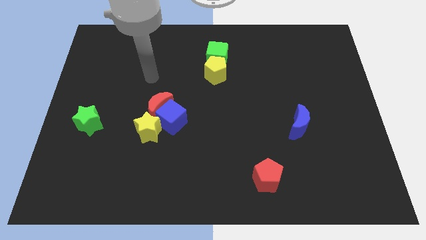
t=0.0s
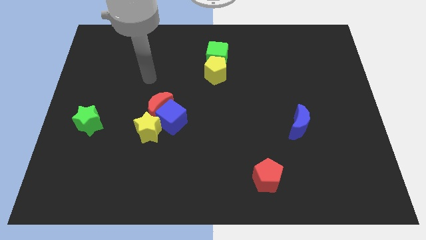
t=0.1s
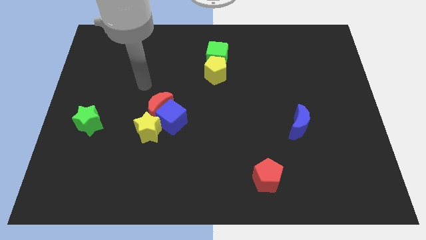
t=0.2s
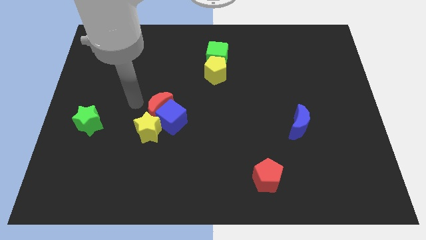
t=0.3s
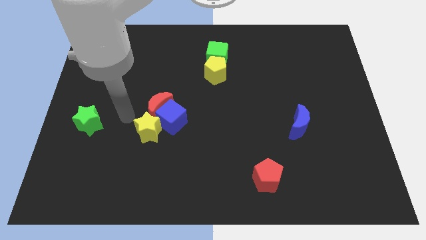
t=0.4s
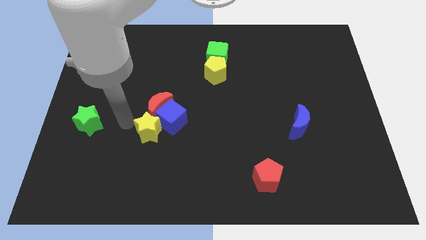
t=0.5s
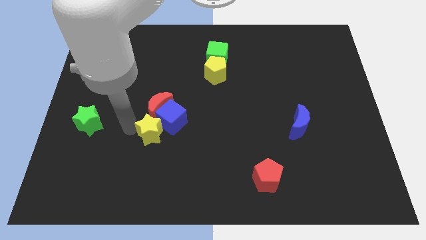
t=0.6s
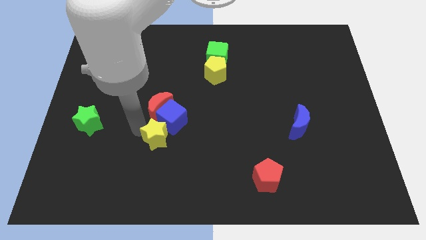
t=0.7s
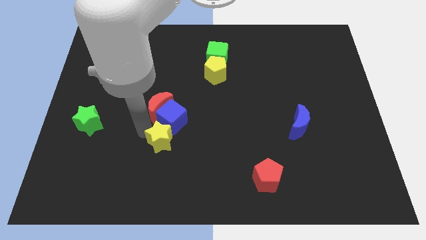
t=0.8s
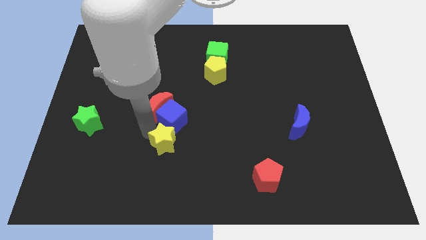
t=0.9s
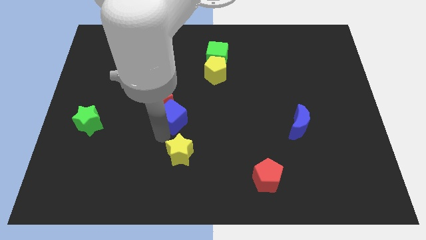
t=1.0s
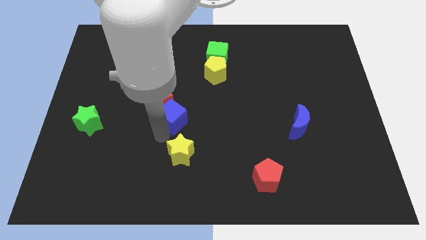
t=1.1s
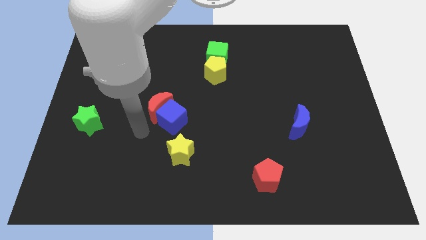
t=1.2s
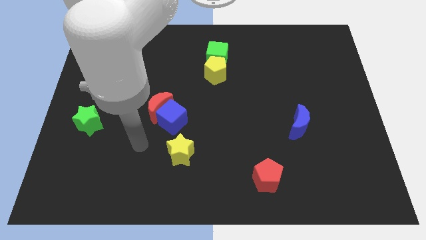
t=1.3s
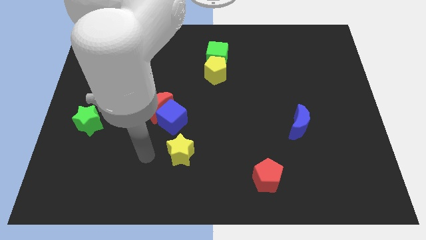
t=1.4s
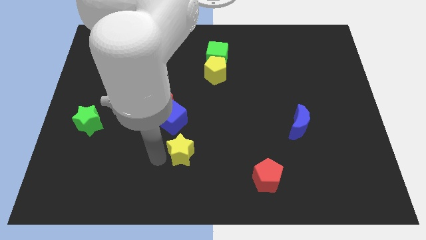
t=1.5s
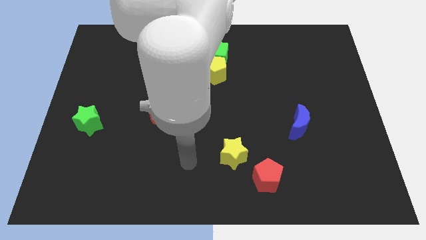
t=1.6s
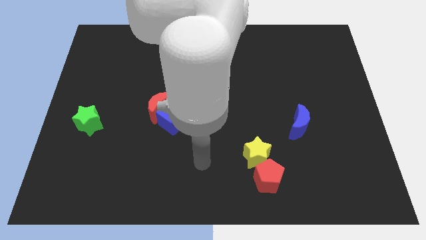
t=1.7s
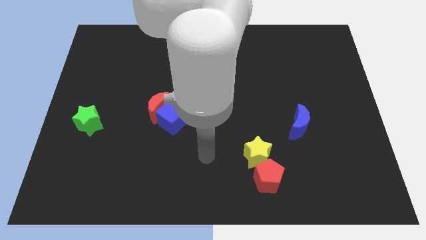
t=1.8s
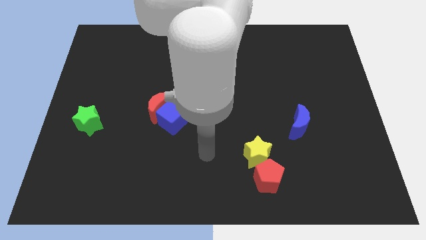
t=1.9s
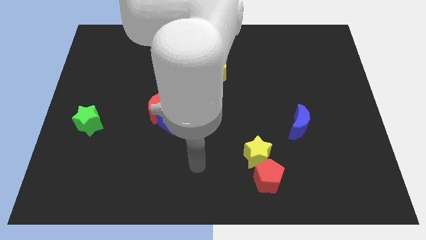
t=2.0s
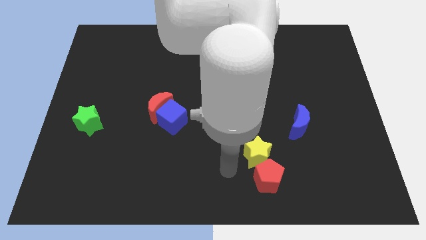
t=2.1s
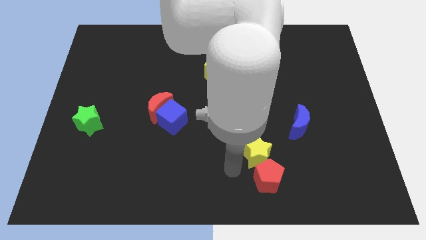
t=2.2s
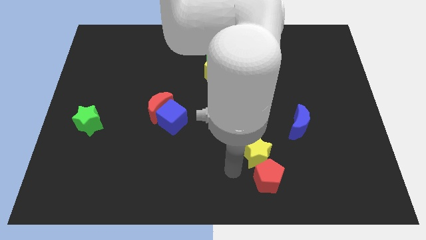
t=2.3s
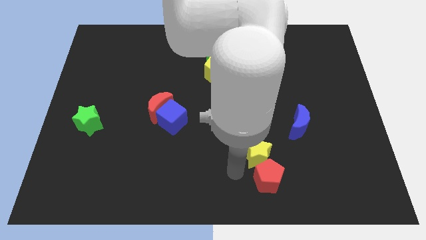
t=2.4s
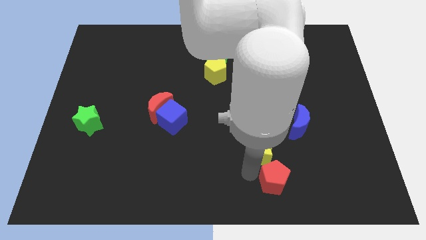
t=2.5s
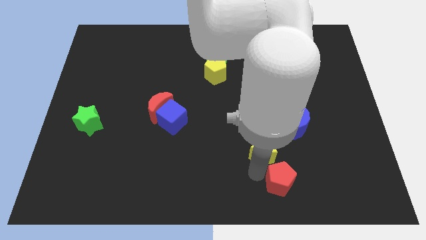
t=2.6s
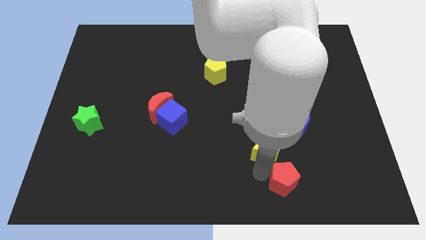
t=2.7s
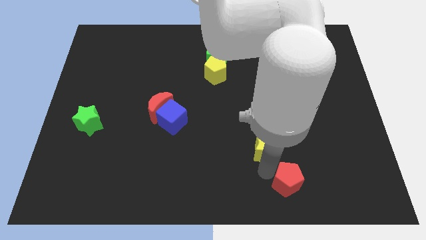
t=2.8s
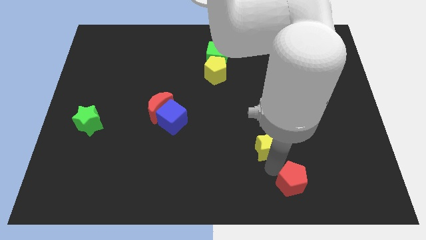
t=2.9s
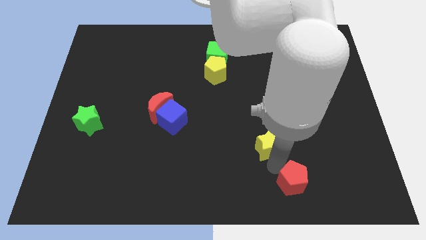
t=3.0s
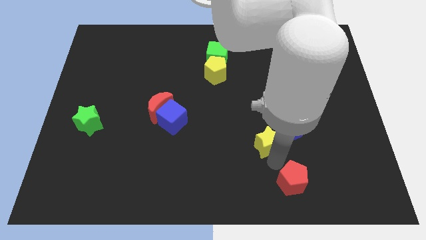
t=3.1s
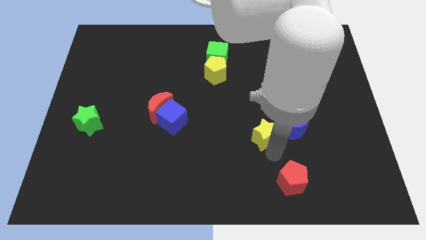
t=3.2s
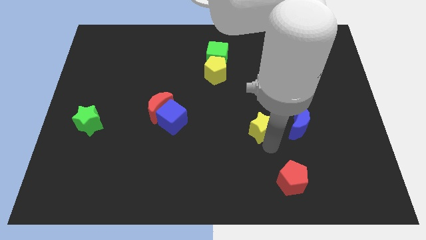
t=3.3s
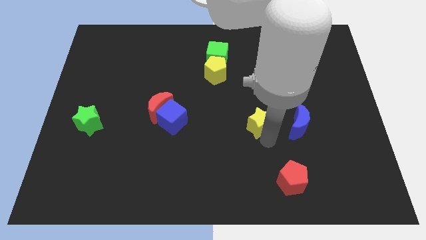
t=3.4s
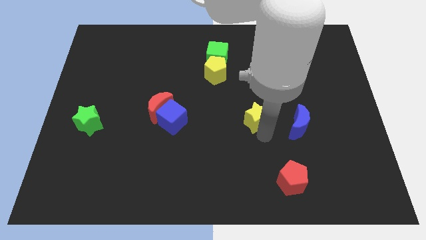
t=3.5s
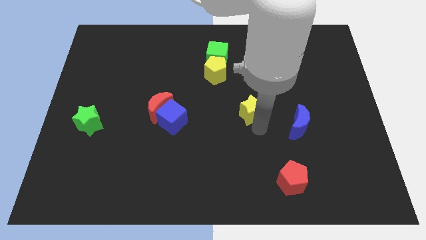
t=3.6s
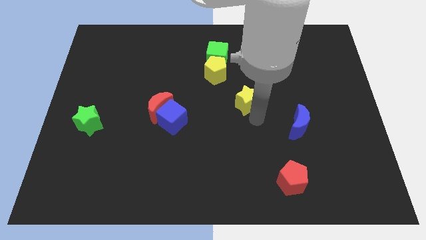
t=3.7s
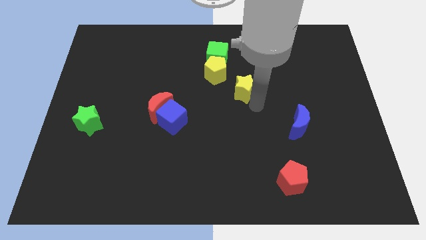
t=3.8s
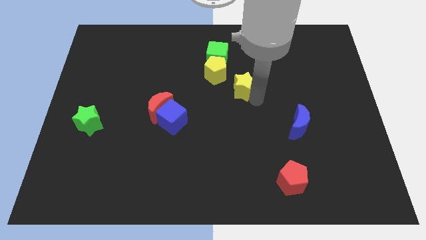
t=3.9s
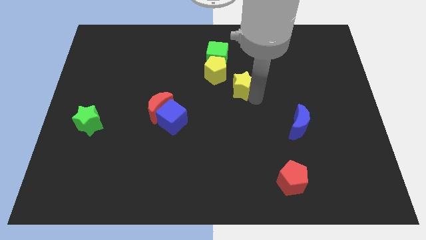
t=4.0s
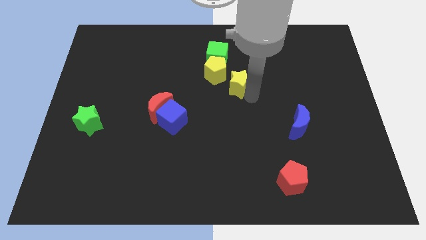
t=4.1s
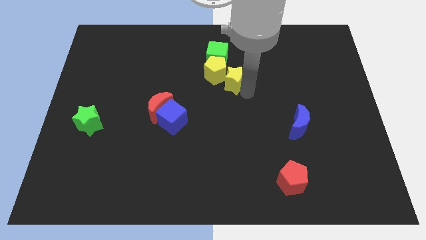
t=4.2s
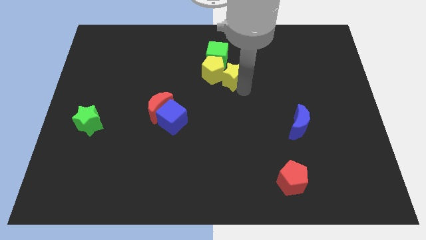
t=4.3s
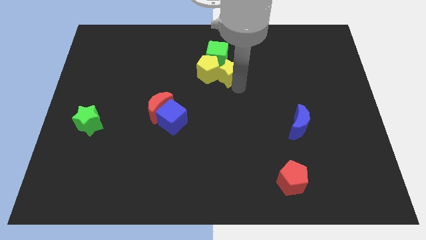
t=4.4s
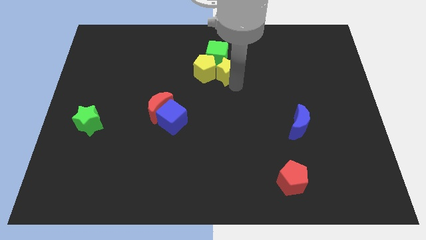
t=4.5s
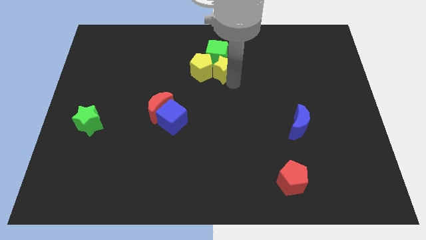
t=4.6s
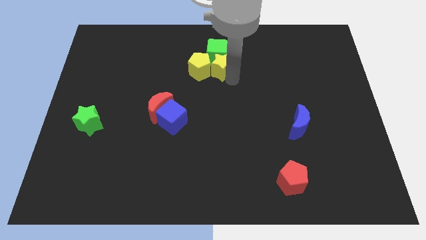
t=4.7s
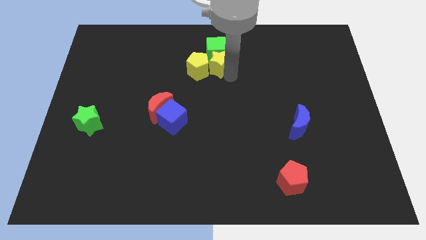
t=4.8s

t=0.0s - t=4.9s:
put the yellow star to the green cube

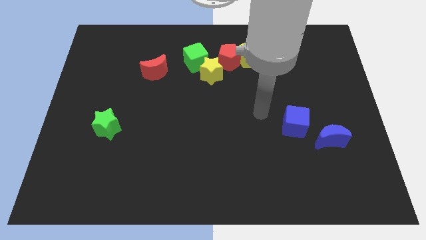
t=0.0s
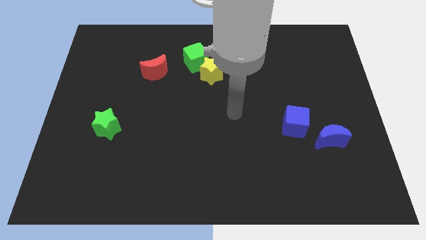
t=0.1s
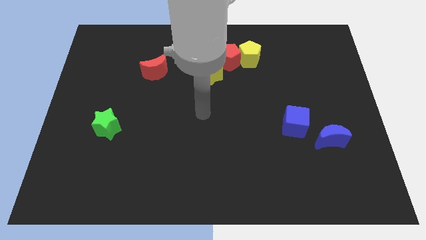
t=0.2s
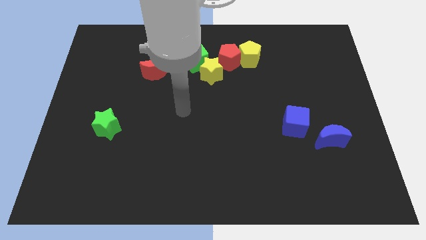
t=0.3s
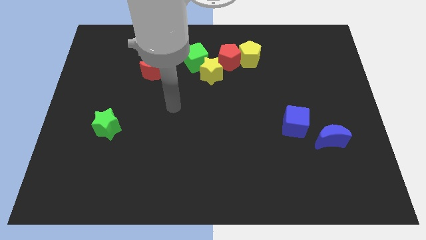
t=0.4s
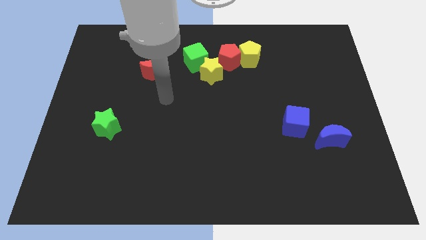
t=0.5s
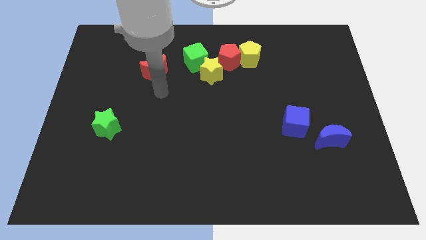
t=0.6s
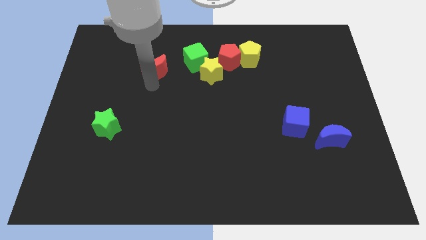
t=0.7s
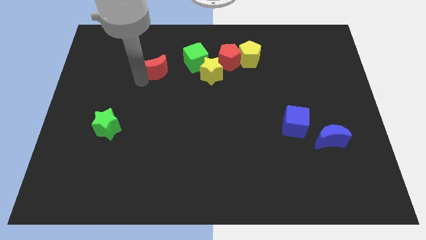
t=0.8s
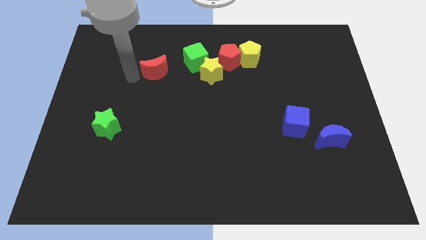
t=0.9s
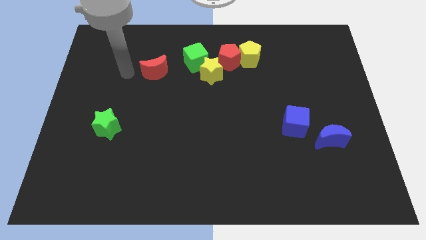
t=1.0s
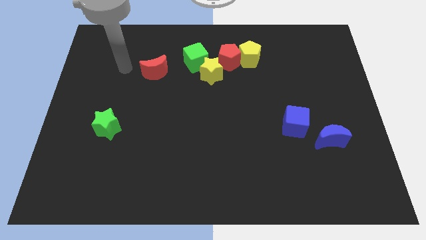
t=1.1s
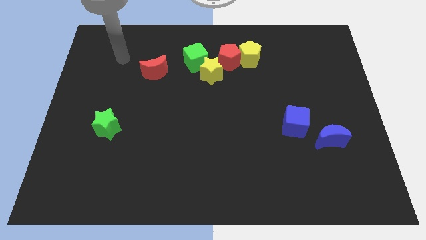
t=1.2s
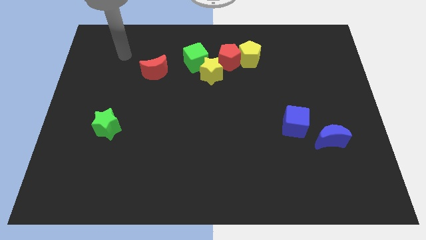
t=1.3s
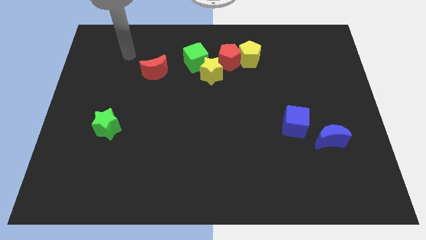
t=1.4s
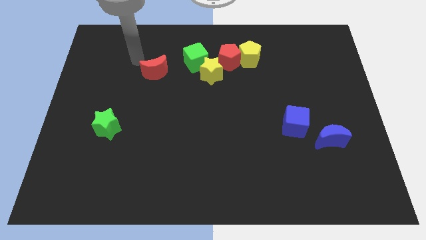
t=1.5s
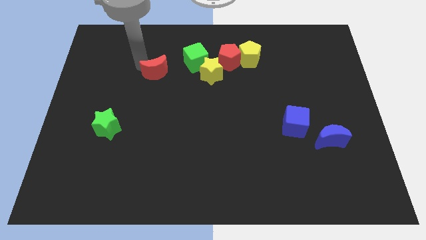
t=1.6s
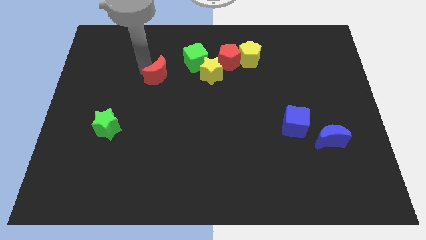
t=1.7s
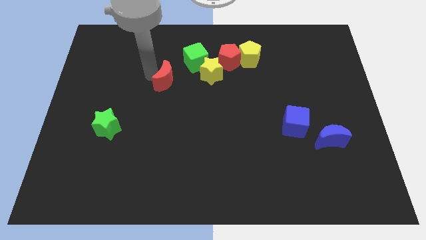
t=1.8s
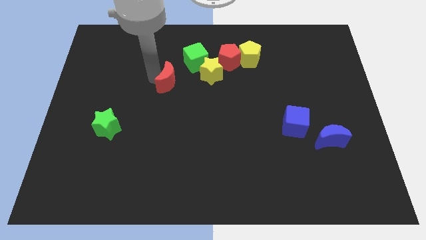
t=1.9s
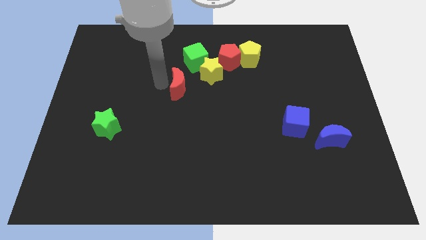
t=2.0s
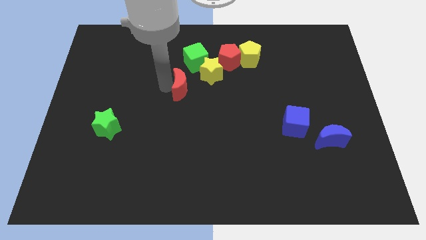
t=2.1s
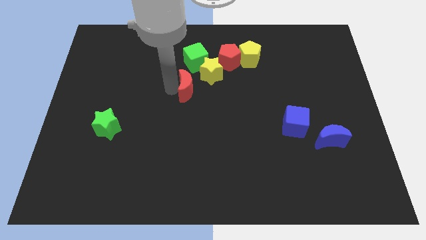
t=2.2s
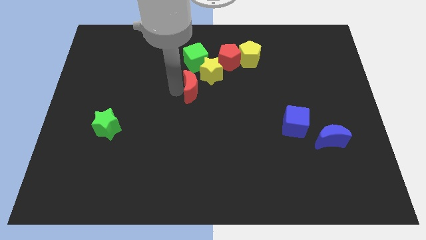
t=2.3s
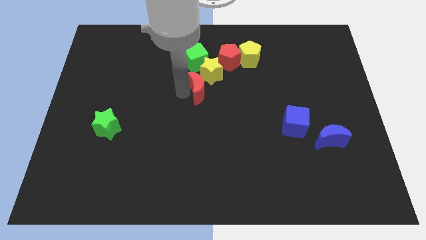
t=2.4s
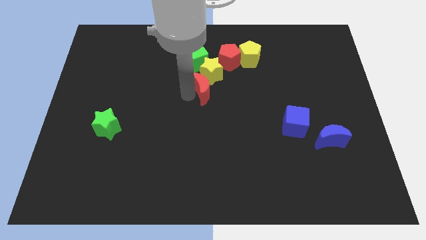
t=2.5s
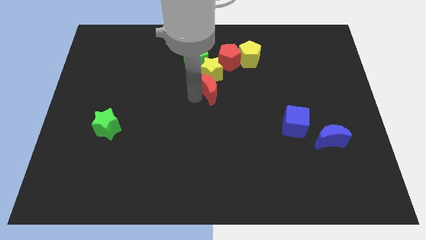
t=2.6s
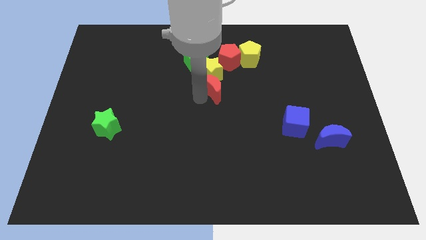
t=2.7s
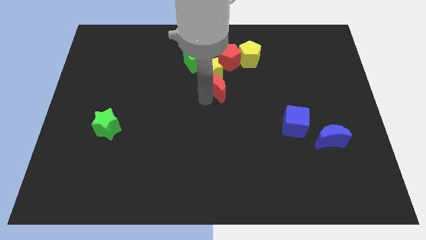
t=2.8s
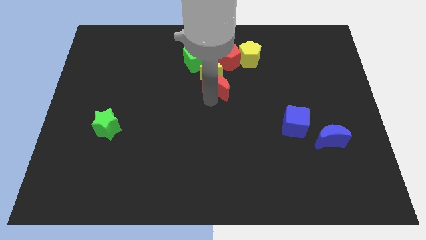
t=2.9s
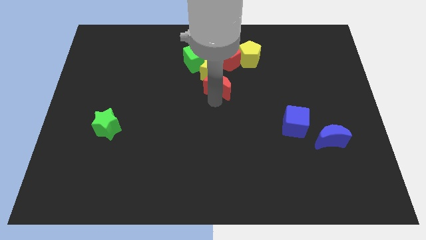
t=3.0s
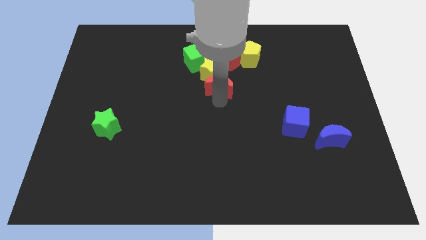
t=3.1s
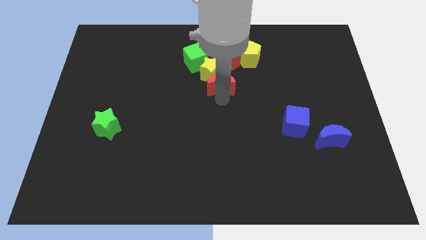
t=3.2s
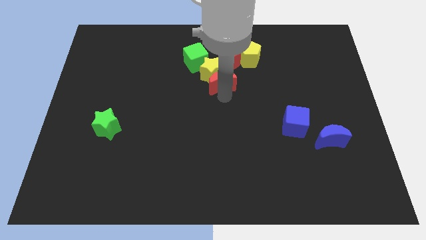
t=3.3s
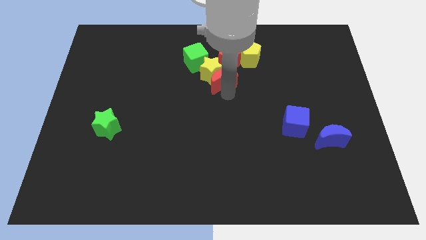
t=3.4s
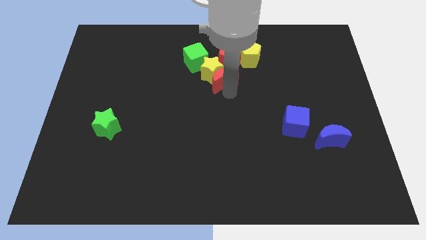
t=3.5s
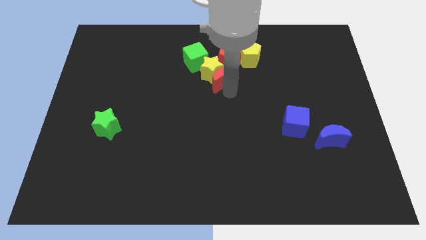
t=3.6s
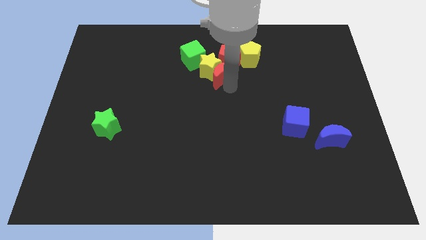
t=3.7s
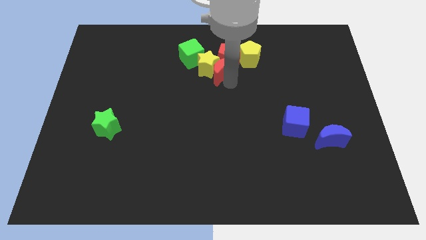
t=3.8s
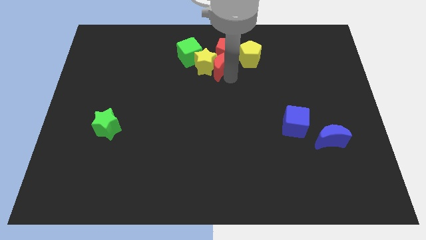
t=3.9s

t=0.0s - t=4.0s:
put the red moon to the red pentagon
